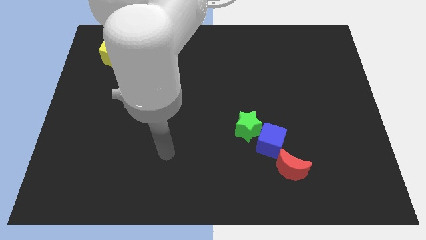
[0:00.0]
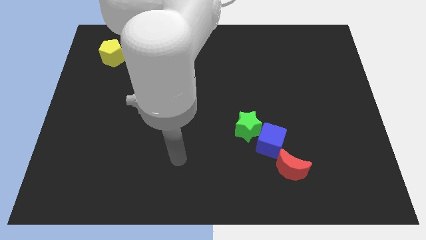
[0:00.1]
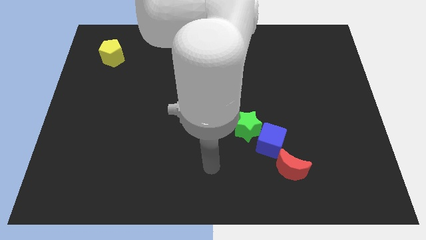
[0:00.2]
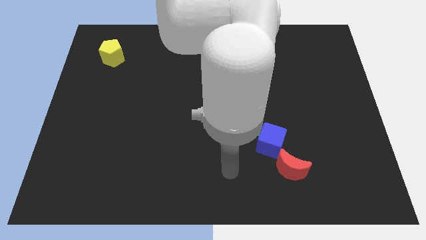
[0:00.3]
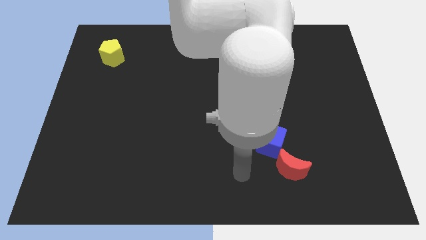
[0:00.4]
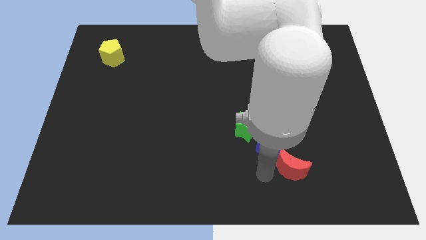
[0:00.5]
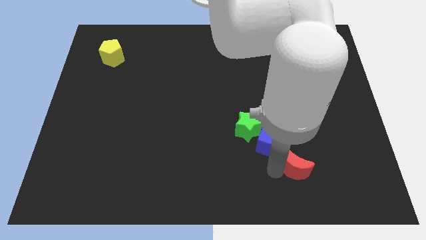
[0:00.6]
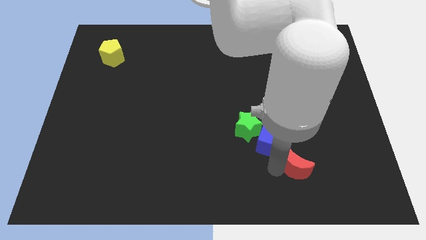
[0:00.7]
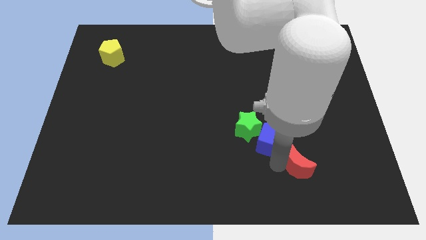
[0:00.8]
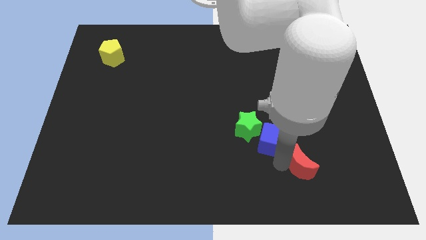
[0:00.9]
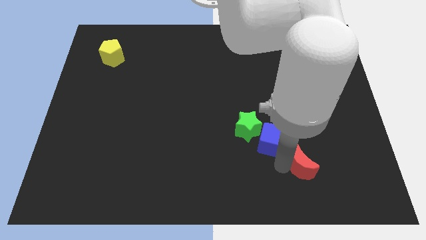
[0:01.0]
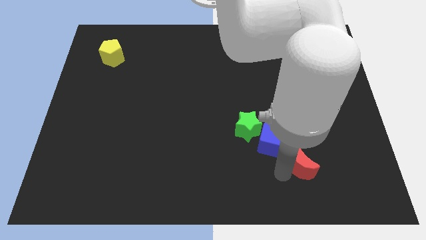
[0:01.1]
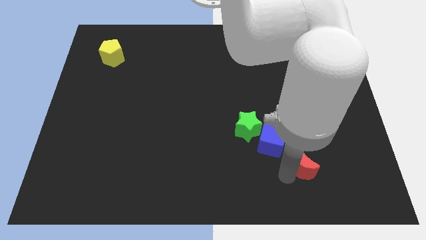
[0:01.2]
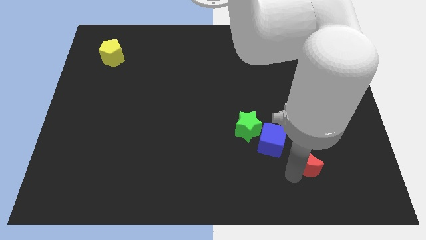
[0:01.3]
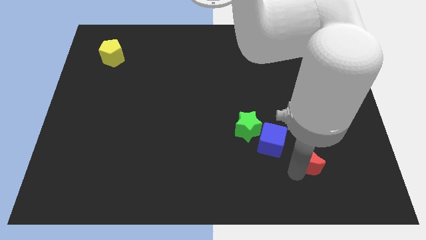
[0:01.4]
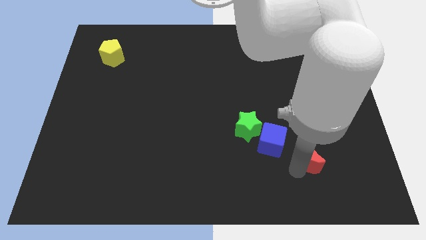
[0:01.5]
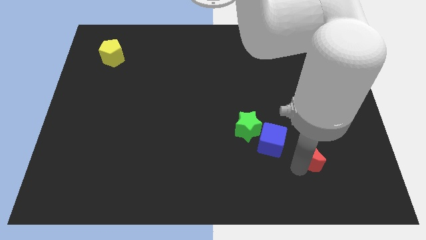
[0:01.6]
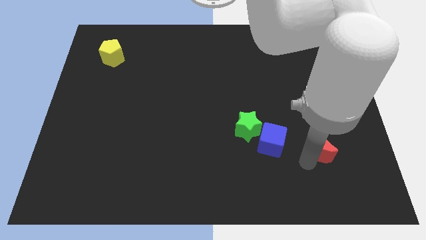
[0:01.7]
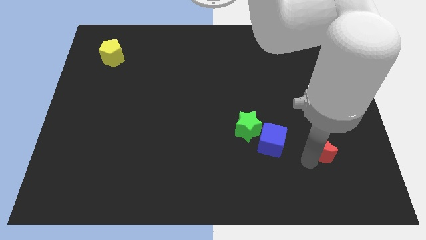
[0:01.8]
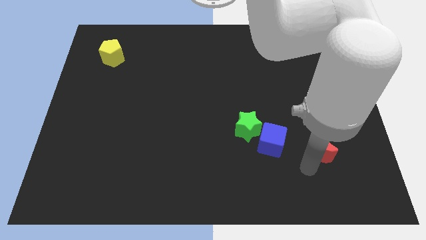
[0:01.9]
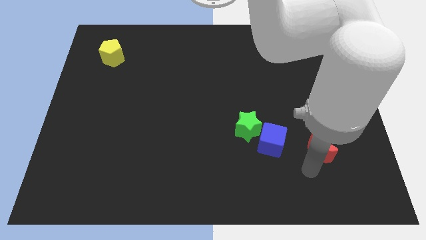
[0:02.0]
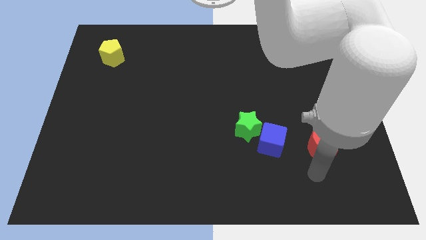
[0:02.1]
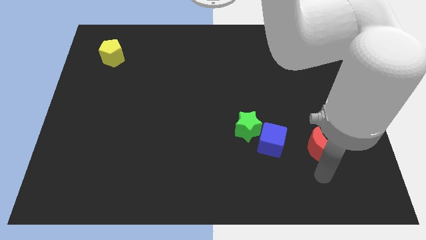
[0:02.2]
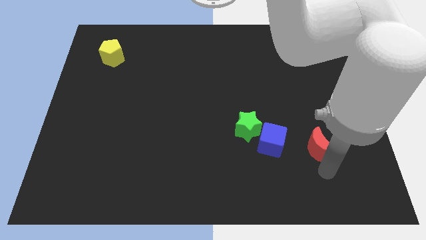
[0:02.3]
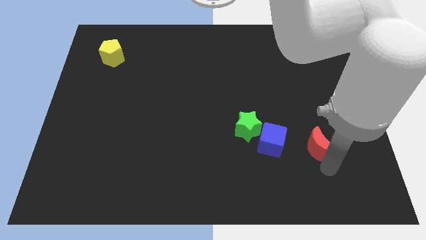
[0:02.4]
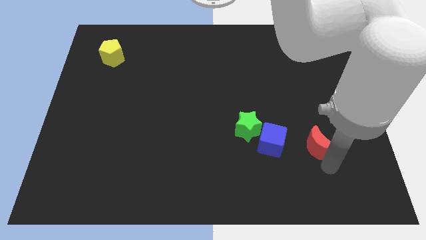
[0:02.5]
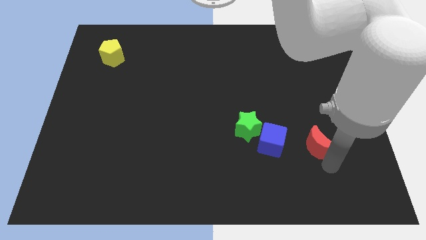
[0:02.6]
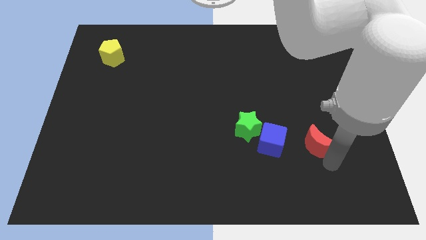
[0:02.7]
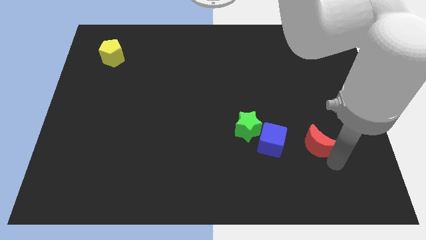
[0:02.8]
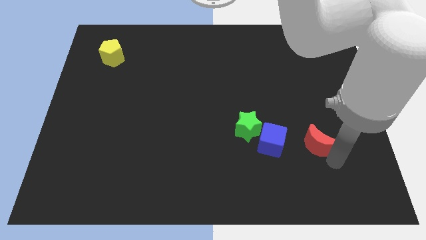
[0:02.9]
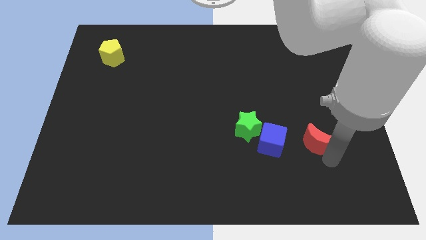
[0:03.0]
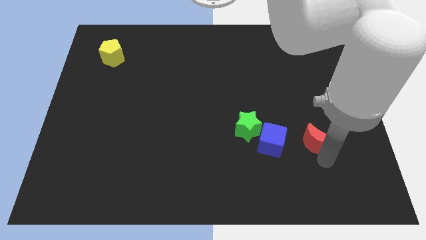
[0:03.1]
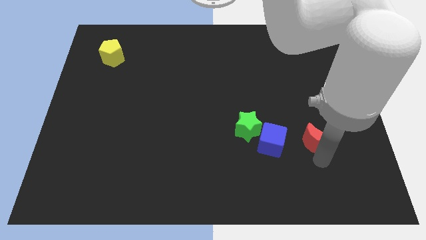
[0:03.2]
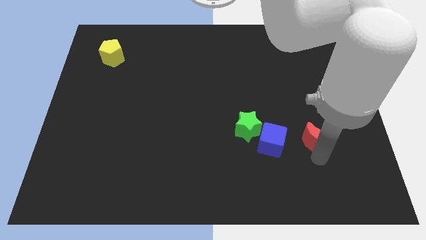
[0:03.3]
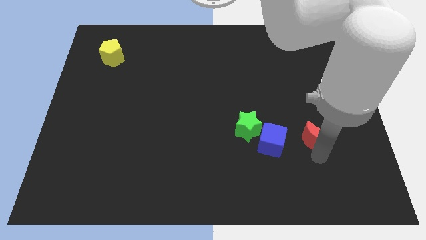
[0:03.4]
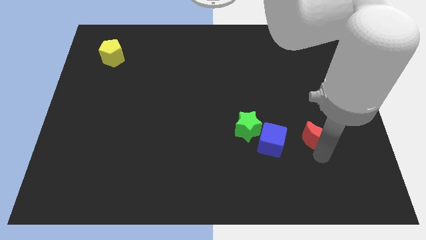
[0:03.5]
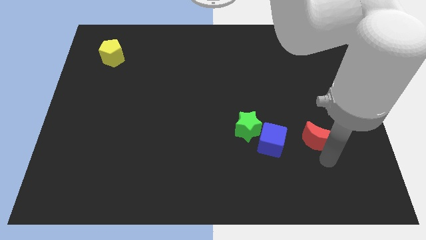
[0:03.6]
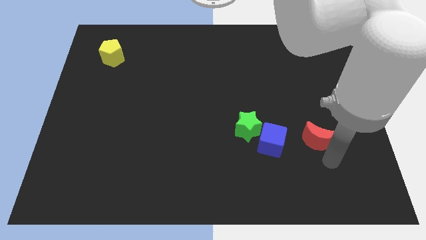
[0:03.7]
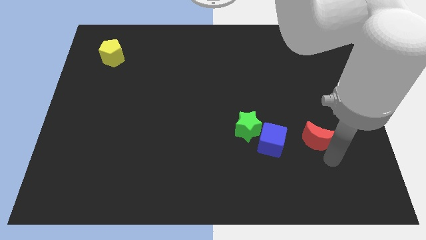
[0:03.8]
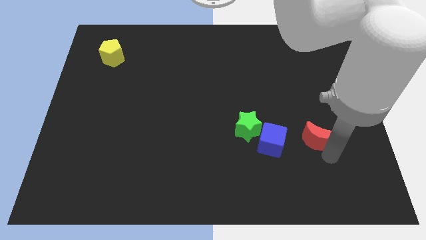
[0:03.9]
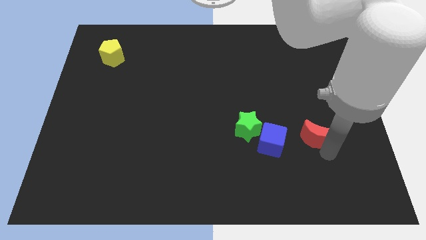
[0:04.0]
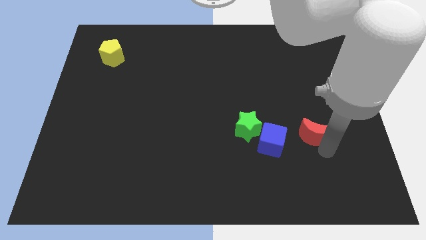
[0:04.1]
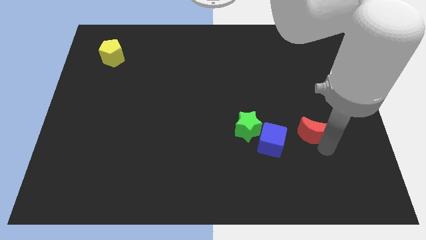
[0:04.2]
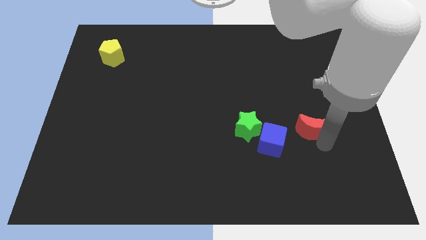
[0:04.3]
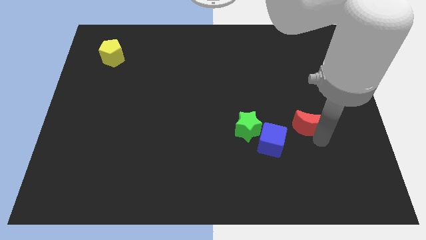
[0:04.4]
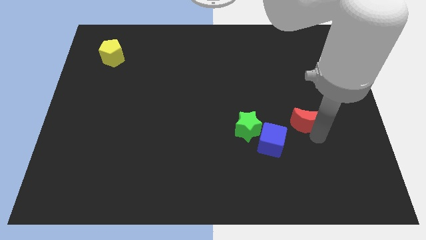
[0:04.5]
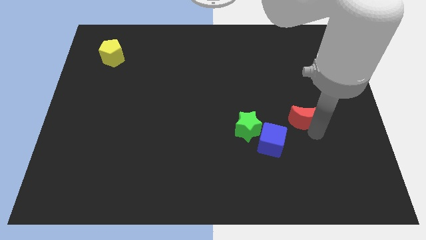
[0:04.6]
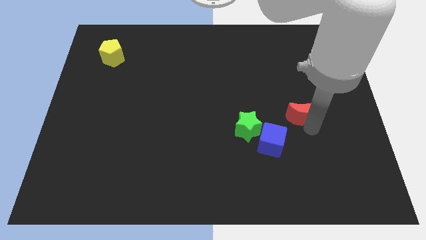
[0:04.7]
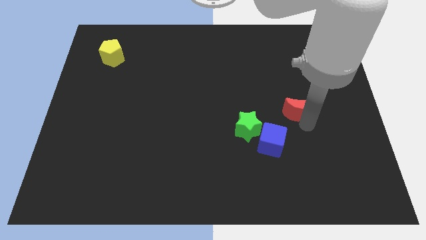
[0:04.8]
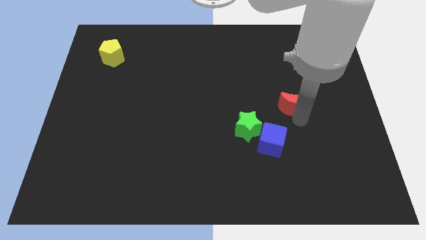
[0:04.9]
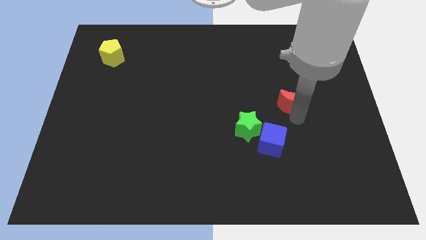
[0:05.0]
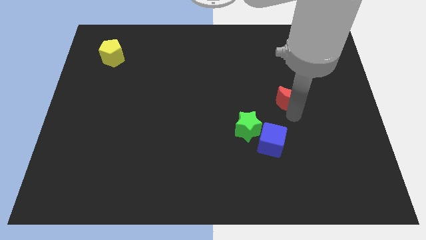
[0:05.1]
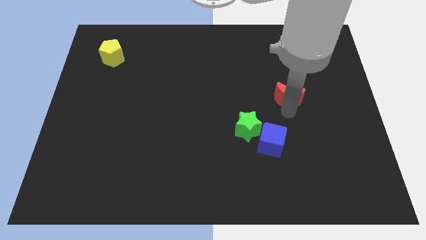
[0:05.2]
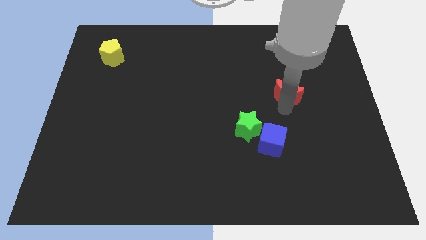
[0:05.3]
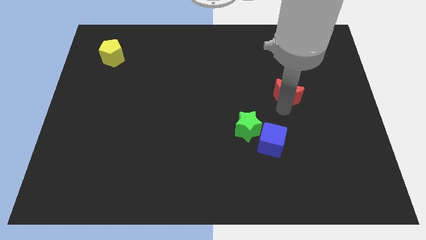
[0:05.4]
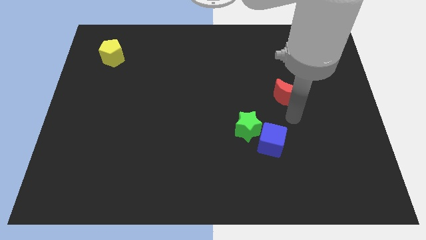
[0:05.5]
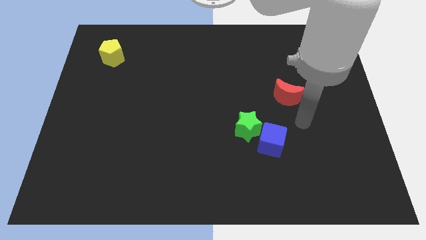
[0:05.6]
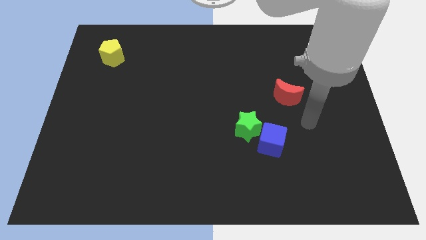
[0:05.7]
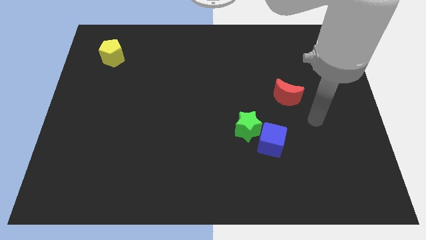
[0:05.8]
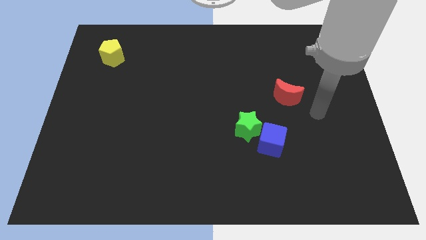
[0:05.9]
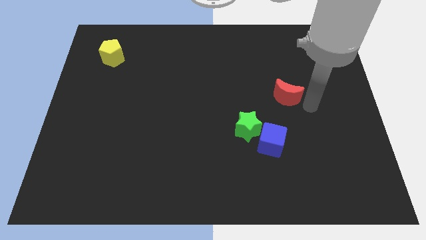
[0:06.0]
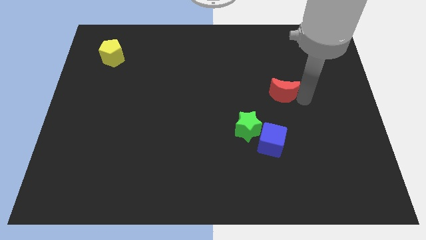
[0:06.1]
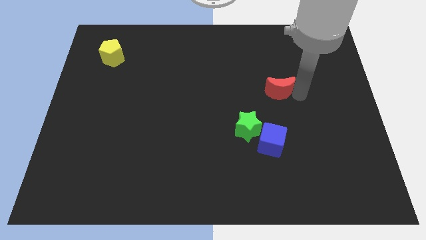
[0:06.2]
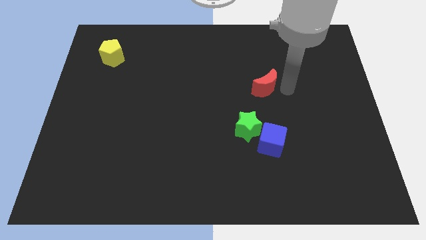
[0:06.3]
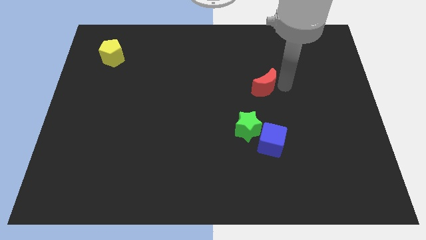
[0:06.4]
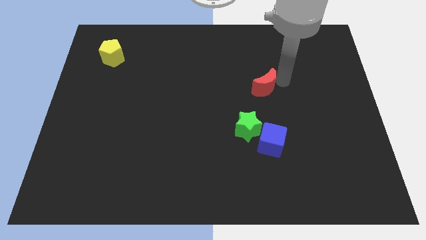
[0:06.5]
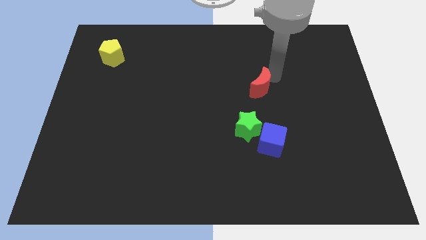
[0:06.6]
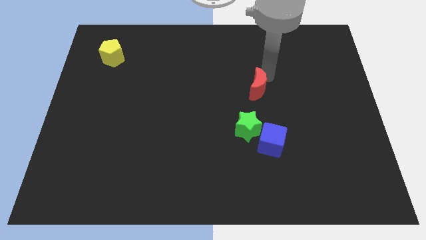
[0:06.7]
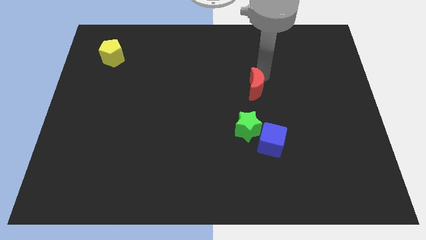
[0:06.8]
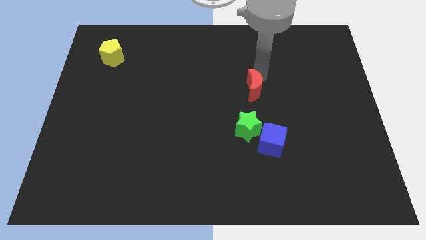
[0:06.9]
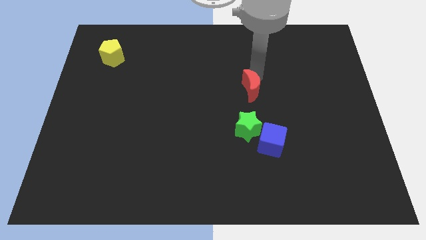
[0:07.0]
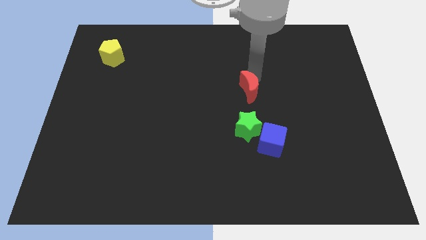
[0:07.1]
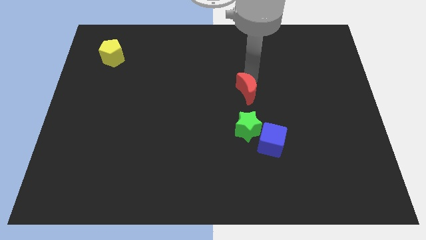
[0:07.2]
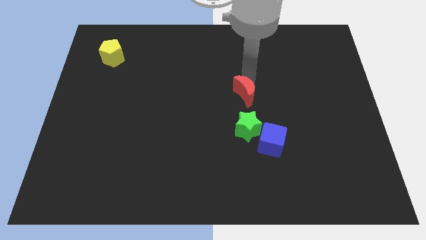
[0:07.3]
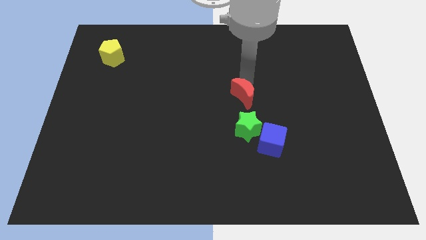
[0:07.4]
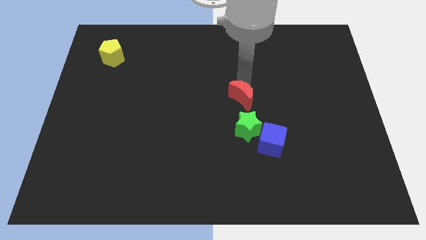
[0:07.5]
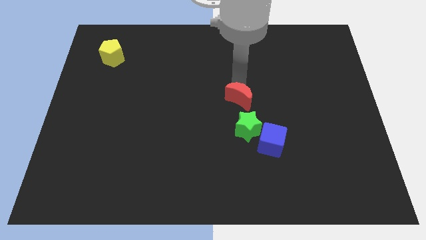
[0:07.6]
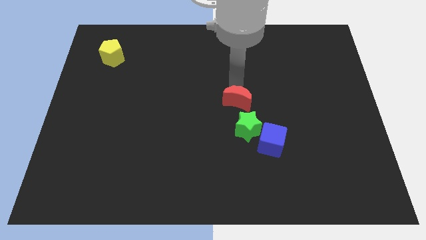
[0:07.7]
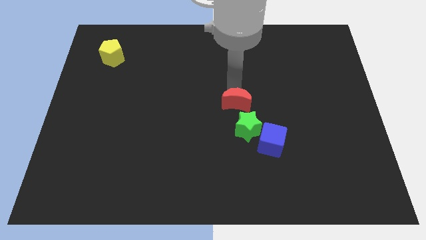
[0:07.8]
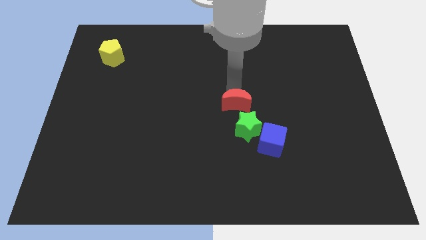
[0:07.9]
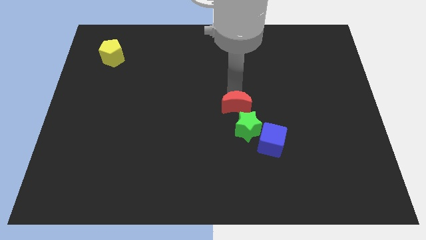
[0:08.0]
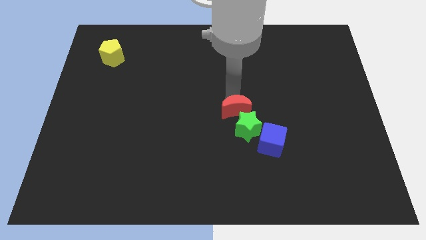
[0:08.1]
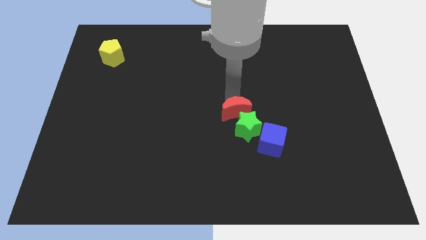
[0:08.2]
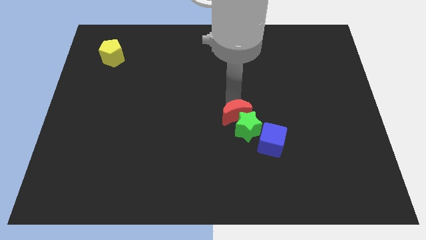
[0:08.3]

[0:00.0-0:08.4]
slide the red moon next to the green star
